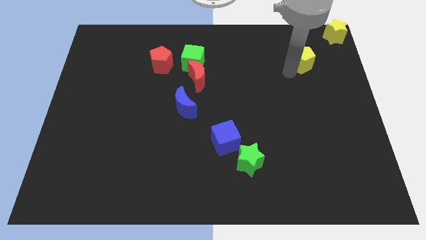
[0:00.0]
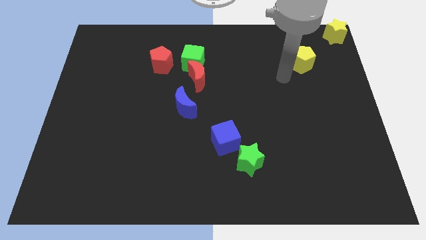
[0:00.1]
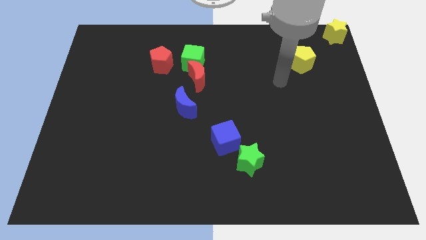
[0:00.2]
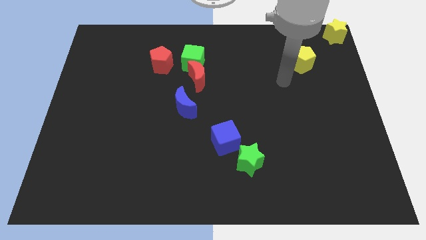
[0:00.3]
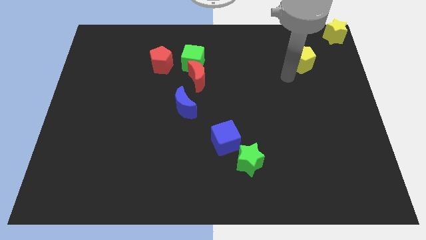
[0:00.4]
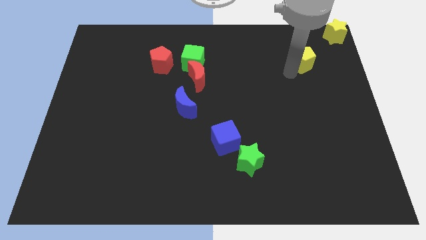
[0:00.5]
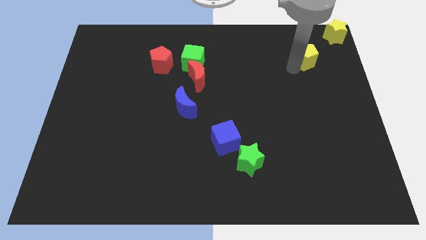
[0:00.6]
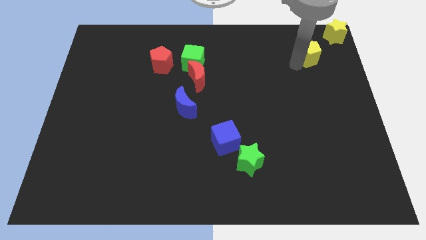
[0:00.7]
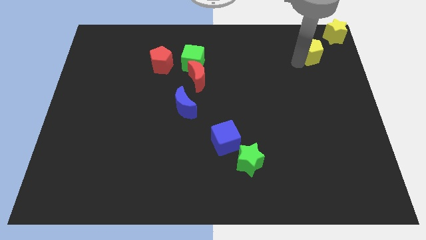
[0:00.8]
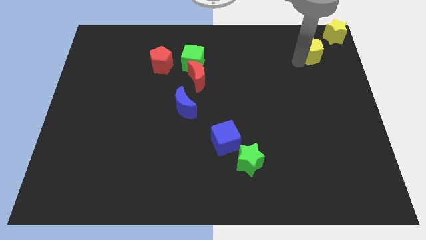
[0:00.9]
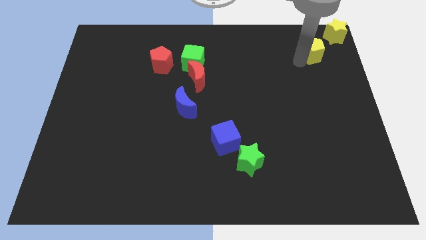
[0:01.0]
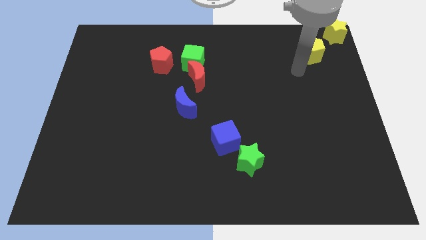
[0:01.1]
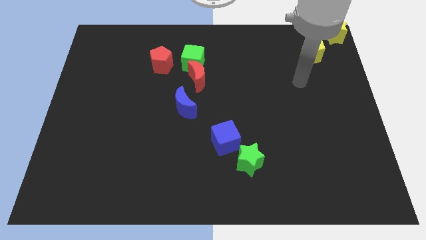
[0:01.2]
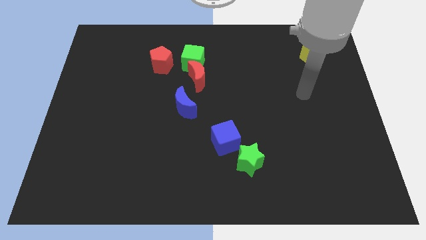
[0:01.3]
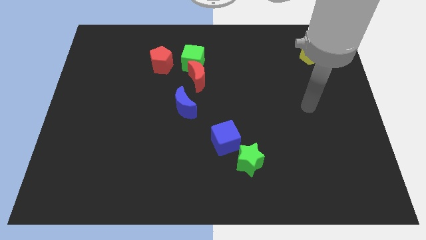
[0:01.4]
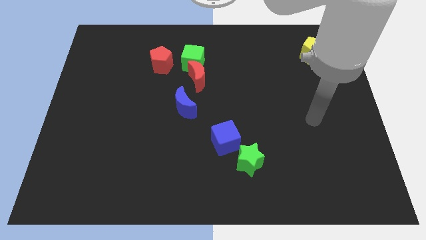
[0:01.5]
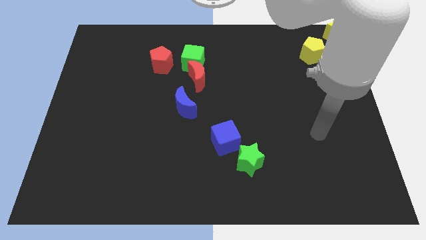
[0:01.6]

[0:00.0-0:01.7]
push the yellow pentagon towards the yellow star

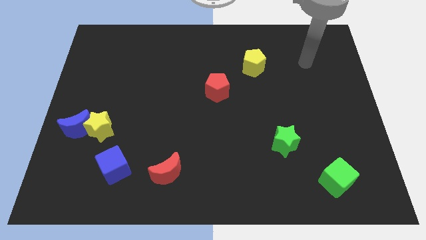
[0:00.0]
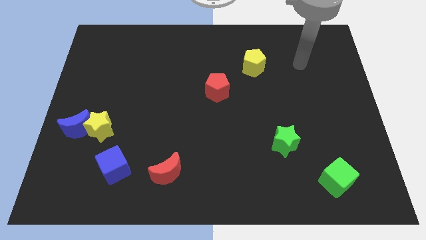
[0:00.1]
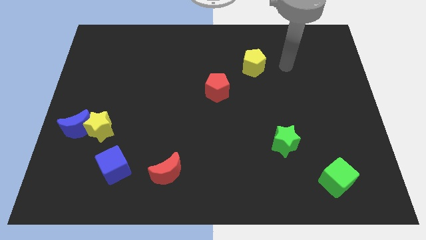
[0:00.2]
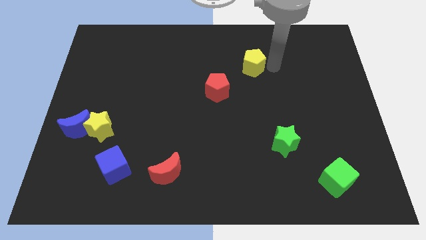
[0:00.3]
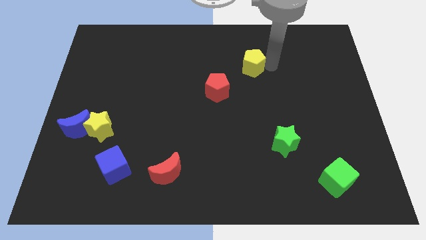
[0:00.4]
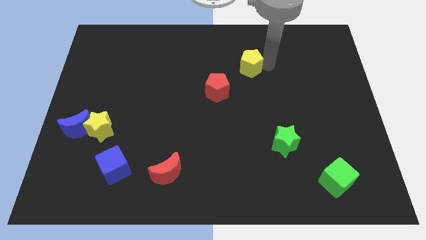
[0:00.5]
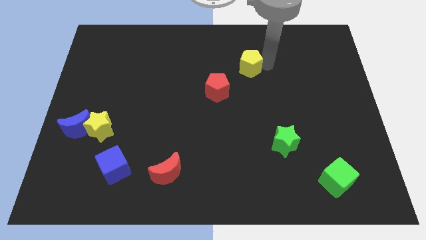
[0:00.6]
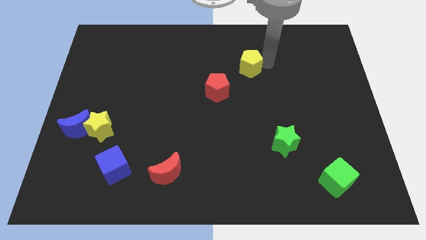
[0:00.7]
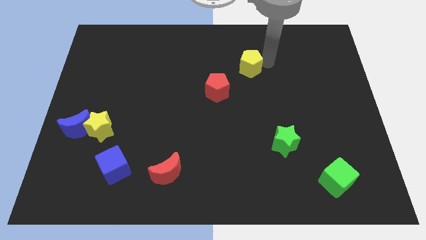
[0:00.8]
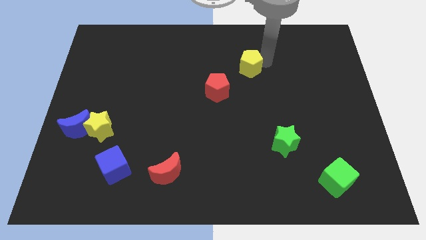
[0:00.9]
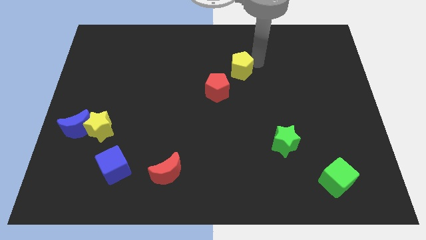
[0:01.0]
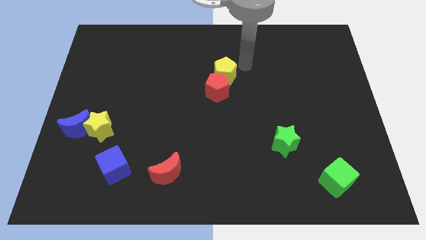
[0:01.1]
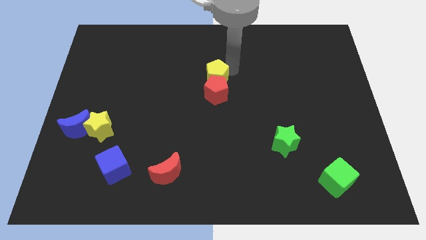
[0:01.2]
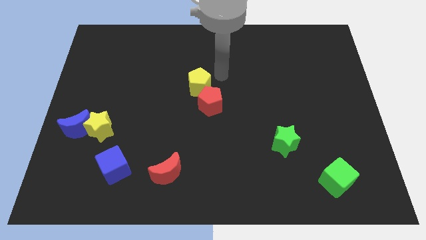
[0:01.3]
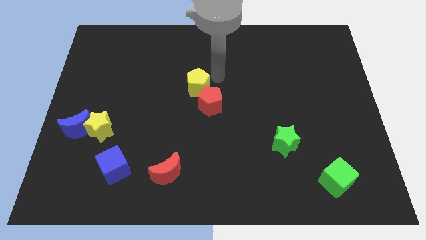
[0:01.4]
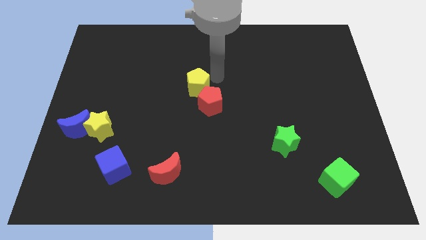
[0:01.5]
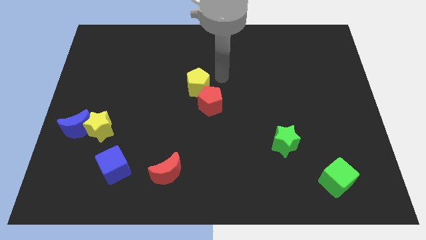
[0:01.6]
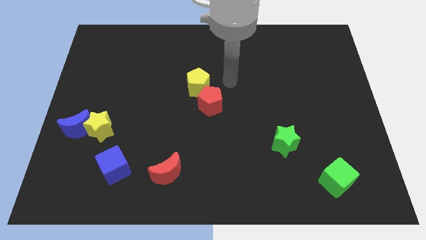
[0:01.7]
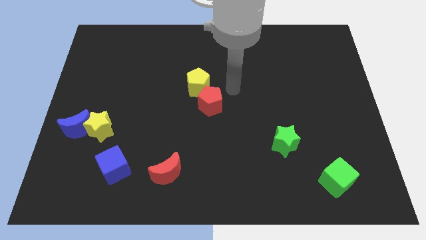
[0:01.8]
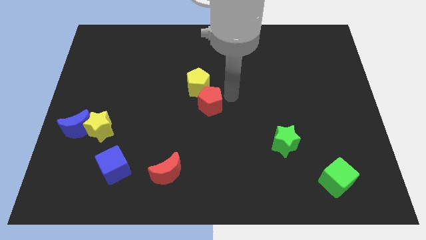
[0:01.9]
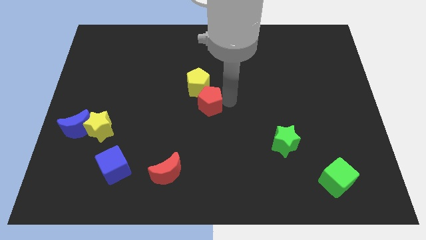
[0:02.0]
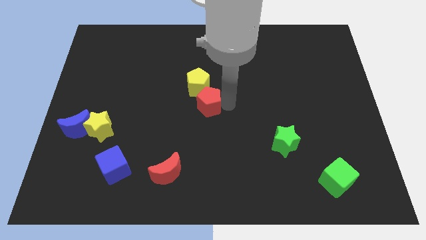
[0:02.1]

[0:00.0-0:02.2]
push the yellow pentagon into the red pentagon

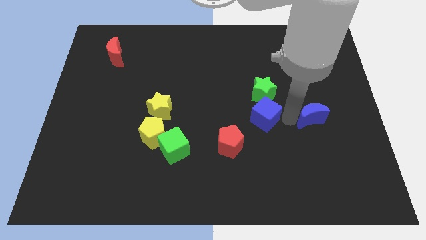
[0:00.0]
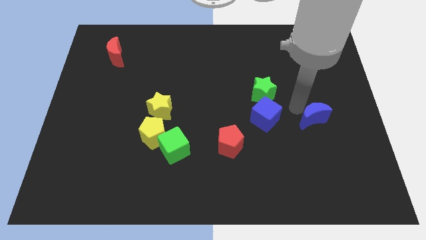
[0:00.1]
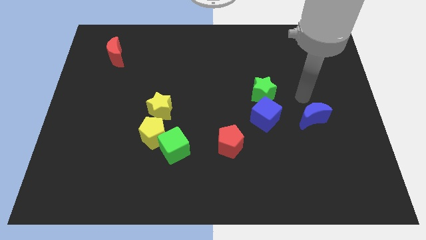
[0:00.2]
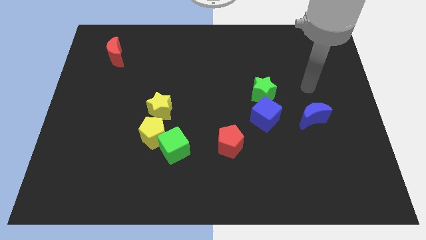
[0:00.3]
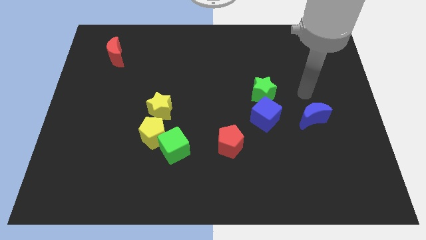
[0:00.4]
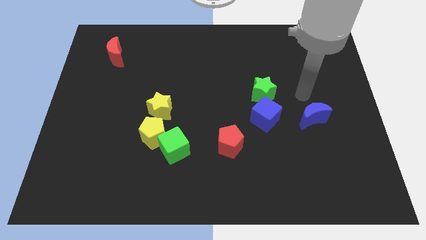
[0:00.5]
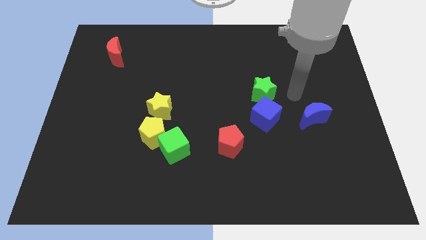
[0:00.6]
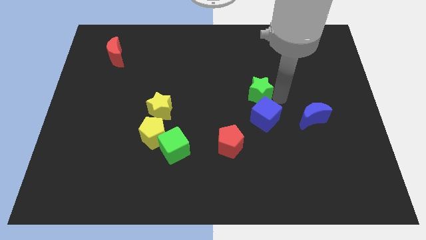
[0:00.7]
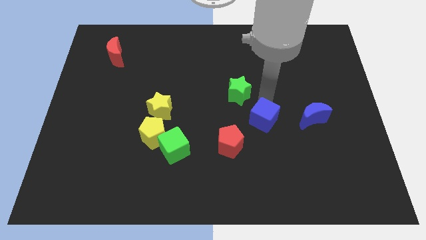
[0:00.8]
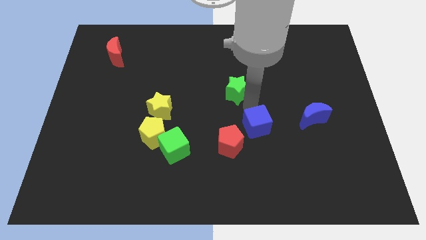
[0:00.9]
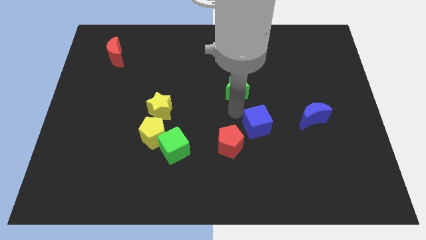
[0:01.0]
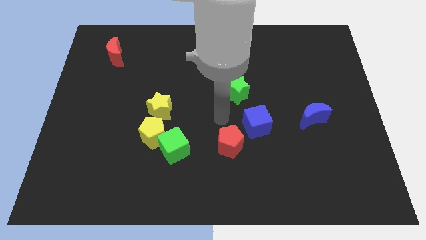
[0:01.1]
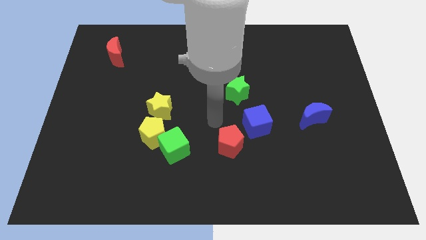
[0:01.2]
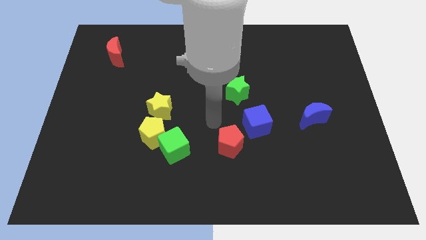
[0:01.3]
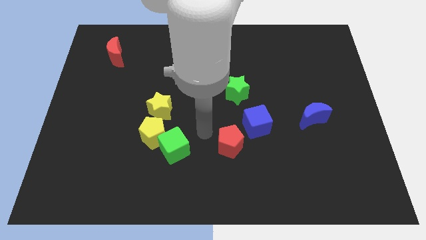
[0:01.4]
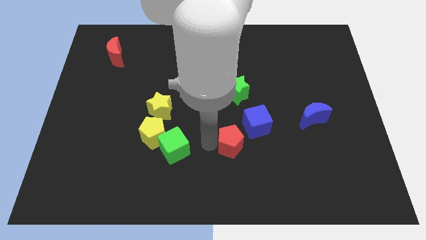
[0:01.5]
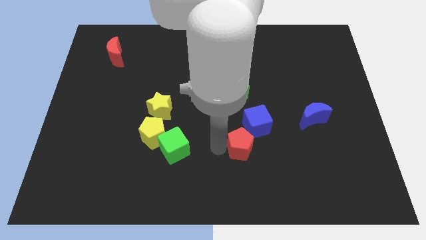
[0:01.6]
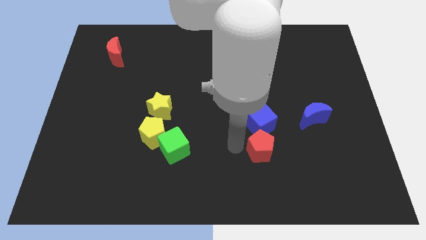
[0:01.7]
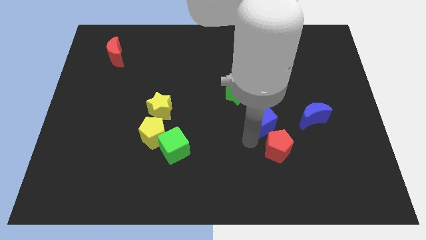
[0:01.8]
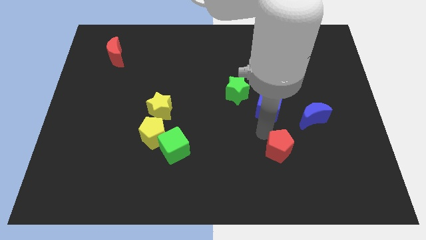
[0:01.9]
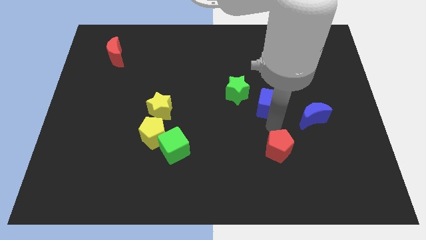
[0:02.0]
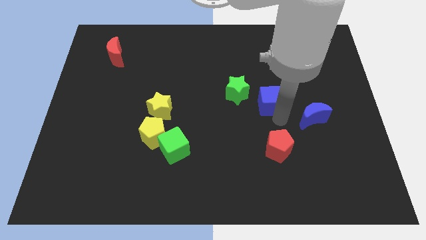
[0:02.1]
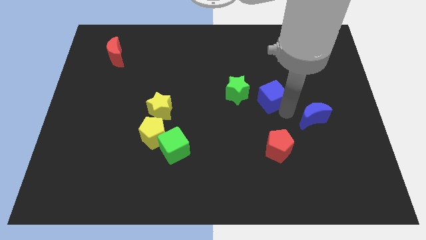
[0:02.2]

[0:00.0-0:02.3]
move blue cube upwards

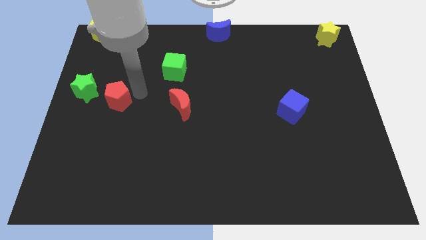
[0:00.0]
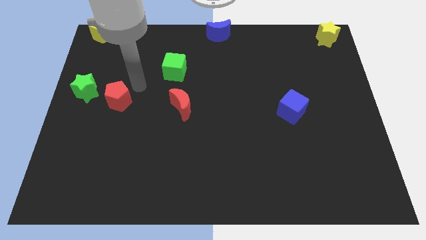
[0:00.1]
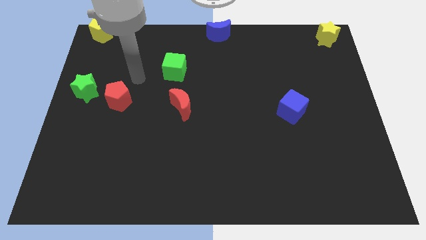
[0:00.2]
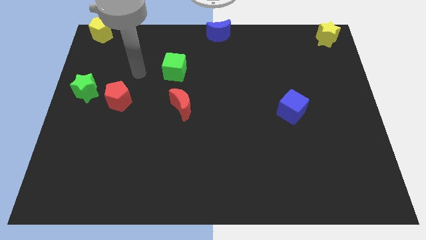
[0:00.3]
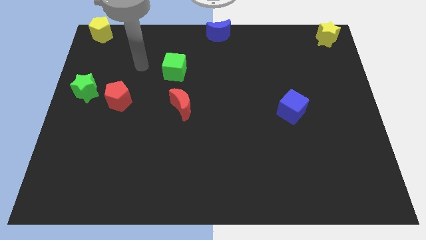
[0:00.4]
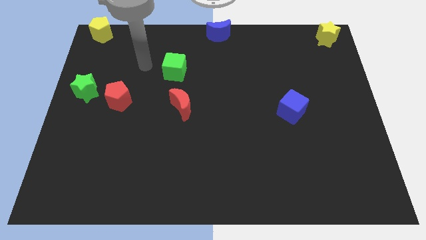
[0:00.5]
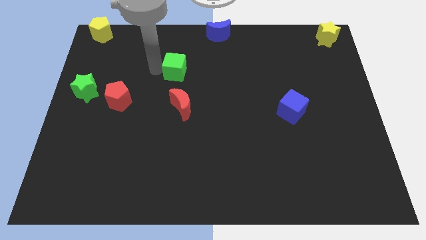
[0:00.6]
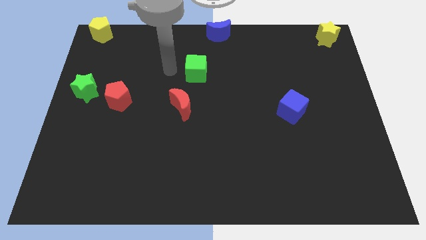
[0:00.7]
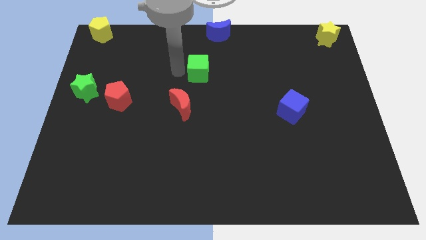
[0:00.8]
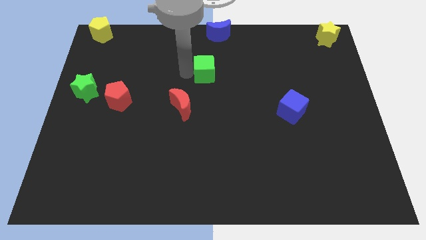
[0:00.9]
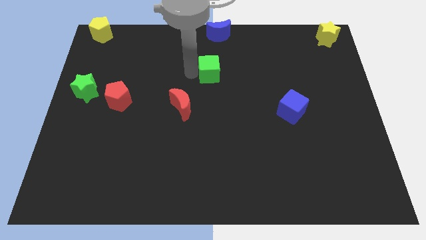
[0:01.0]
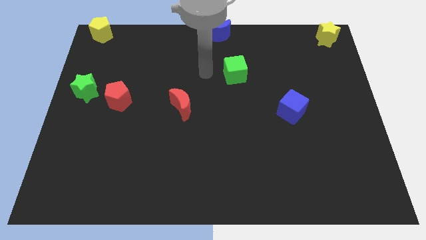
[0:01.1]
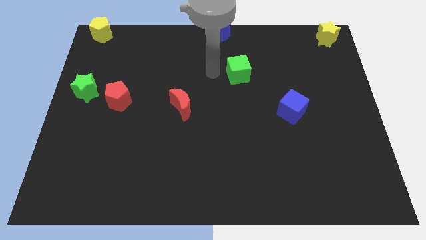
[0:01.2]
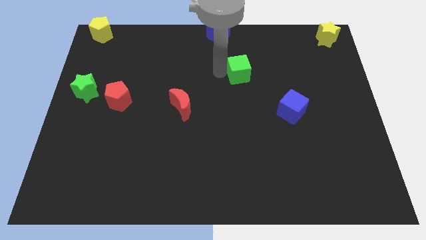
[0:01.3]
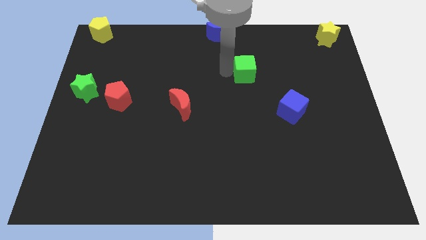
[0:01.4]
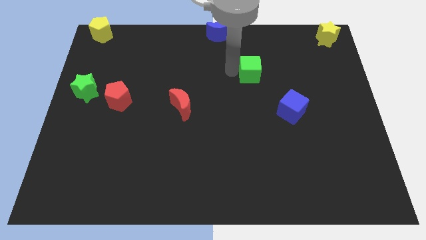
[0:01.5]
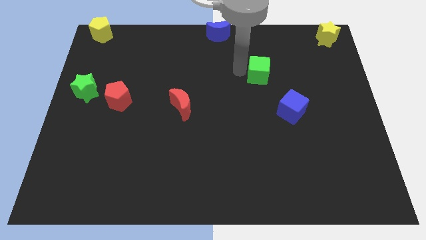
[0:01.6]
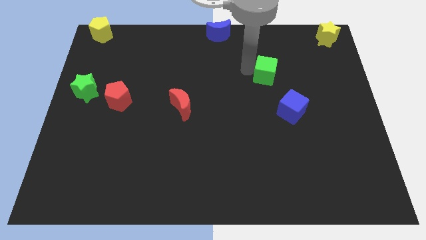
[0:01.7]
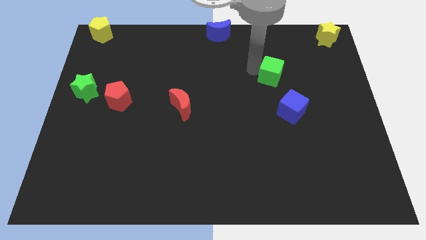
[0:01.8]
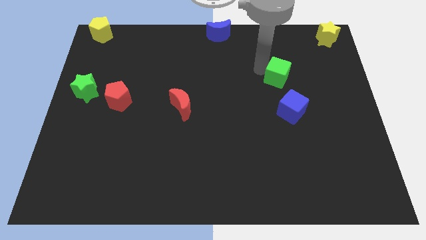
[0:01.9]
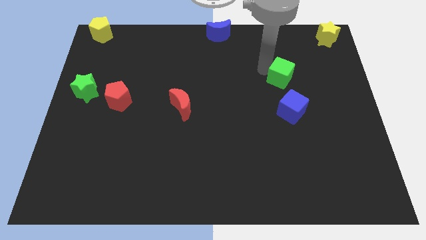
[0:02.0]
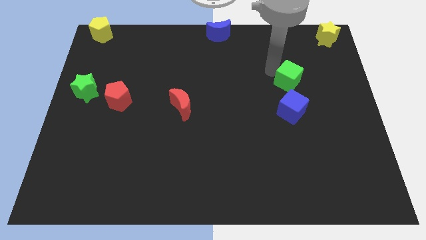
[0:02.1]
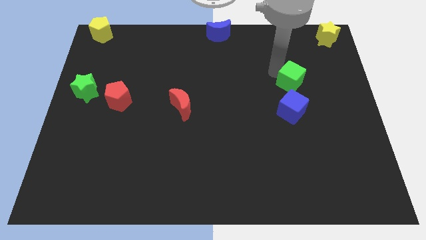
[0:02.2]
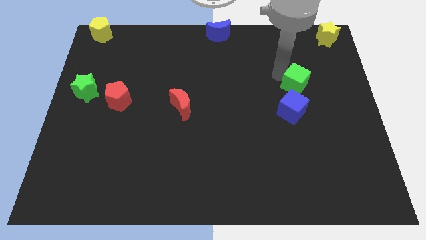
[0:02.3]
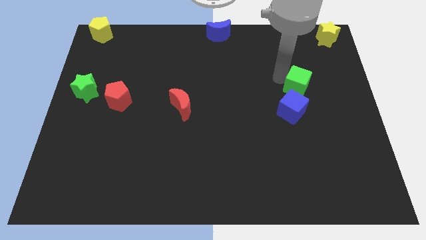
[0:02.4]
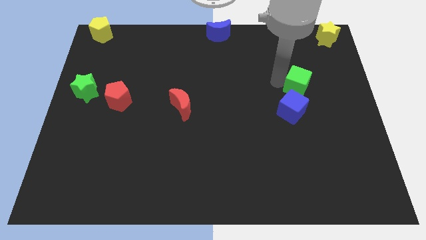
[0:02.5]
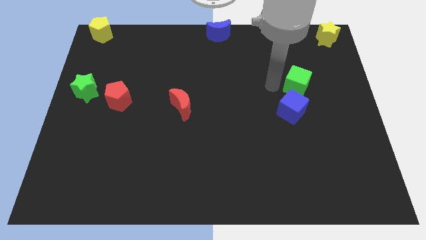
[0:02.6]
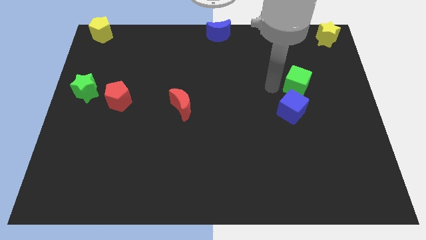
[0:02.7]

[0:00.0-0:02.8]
move the green cube to the top of the blue cube
